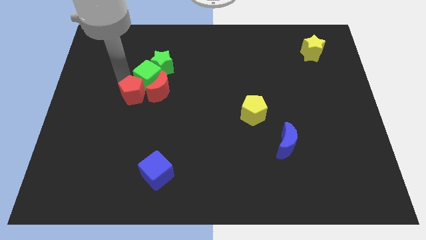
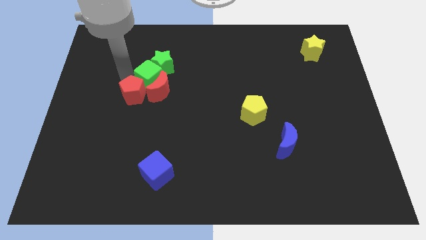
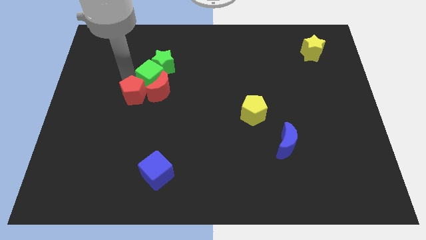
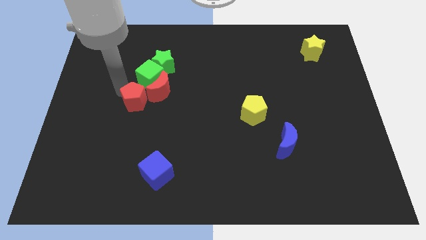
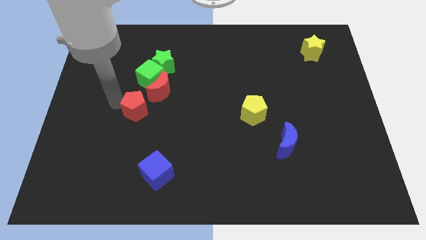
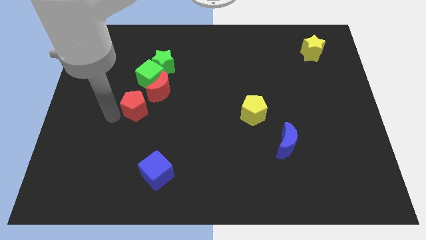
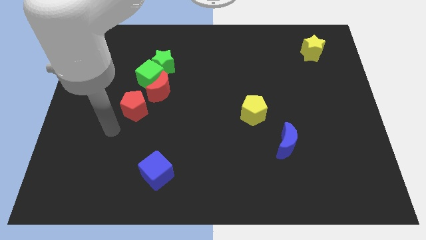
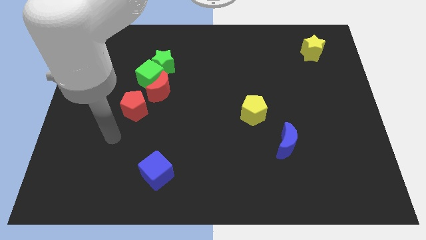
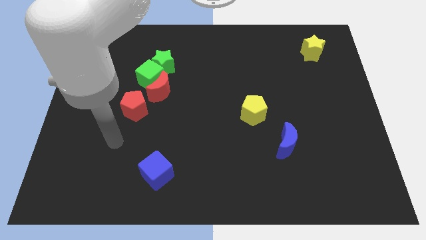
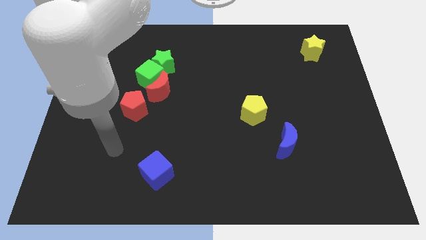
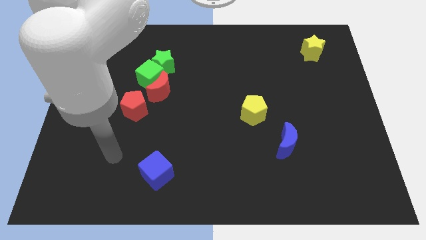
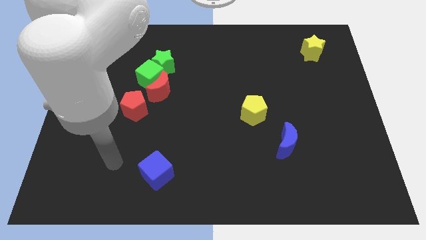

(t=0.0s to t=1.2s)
slightly push red pentagon downwards

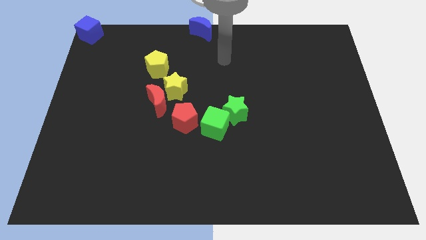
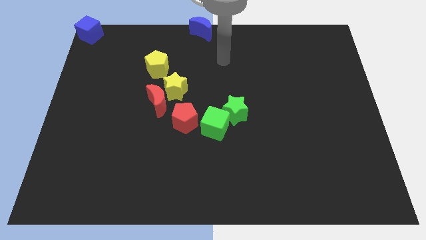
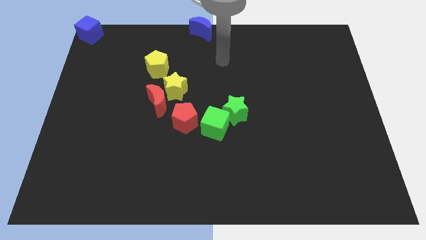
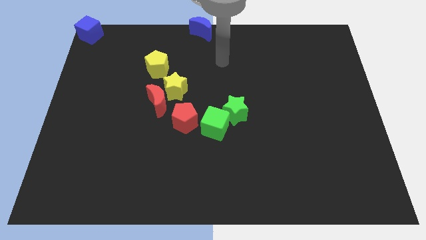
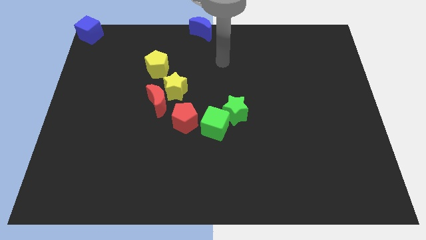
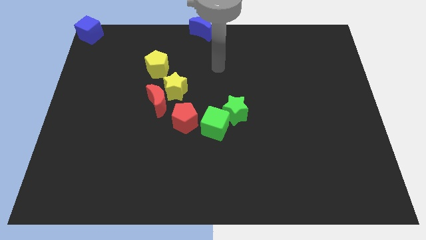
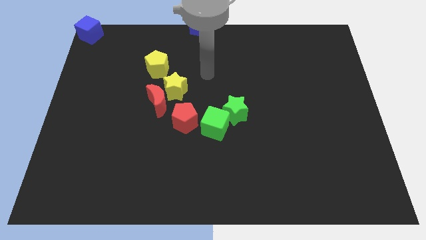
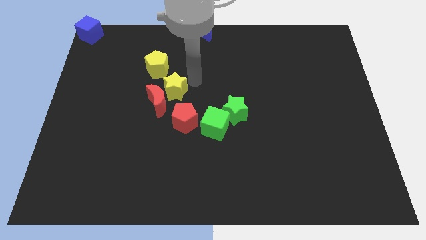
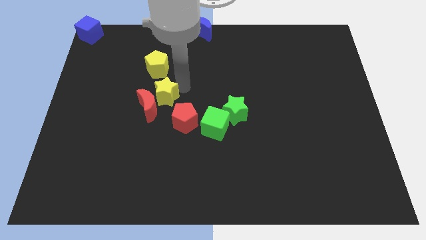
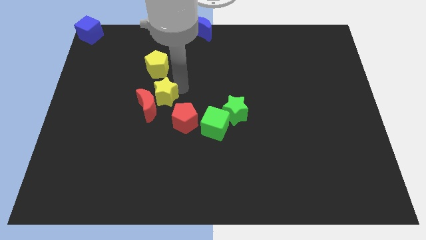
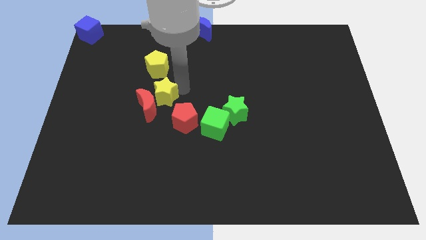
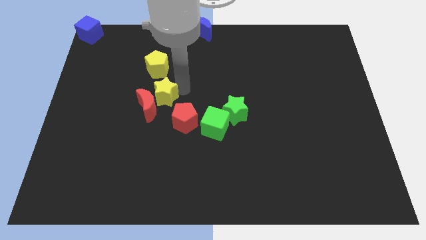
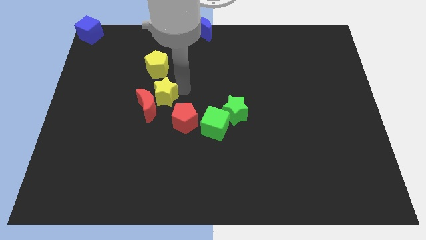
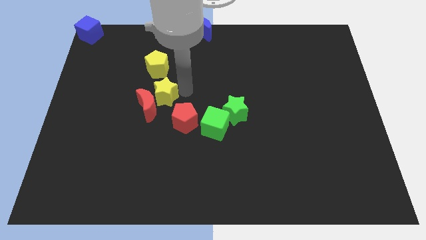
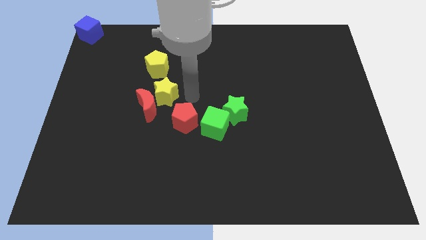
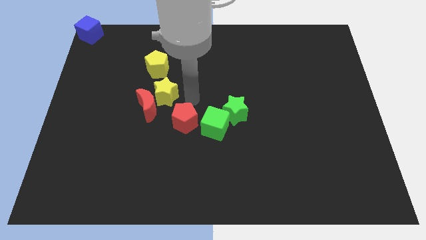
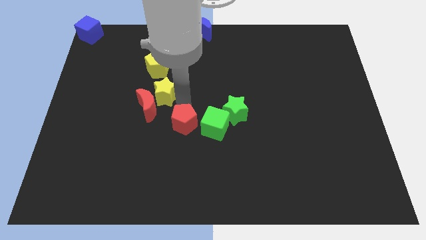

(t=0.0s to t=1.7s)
move the red moon with the yellow star

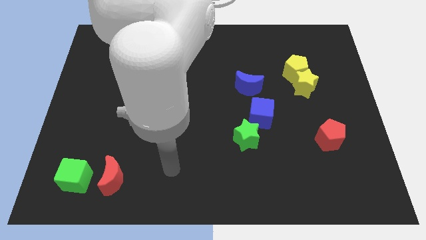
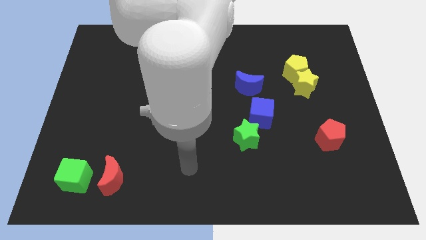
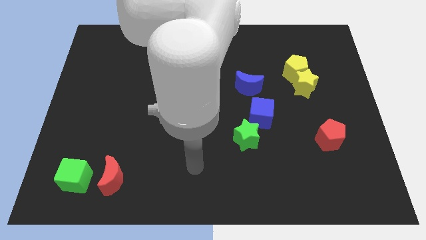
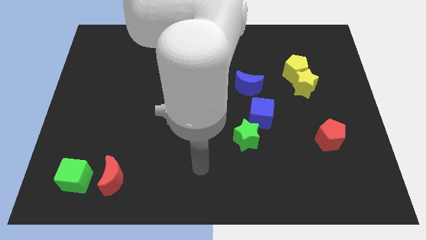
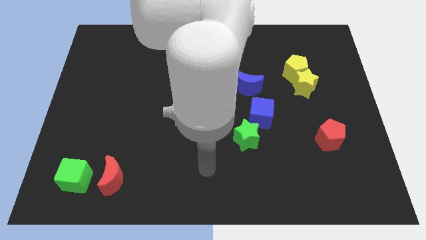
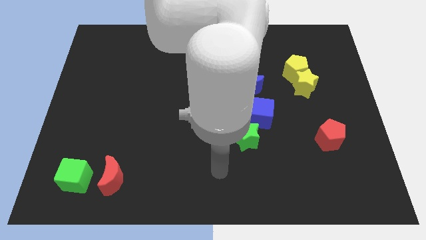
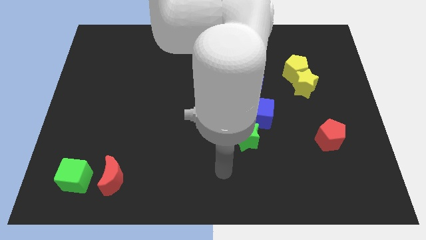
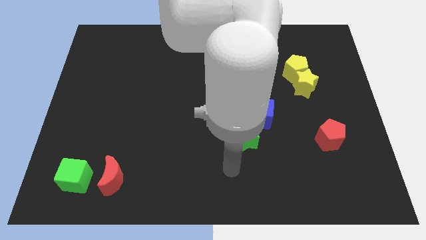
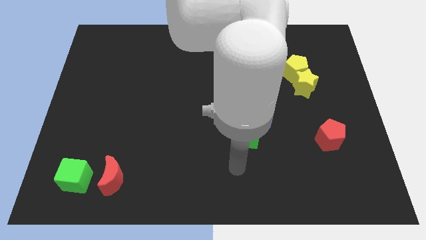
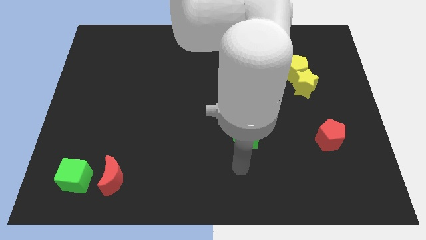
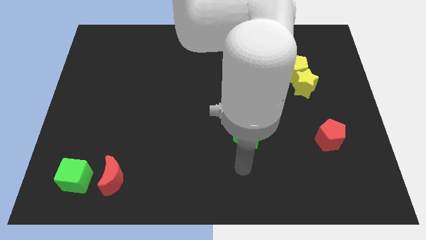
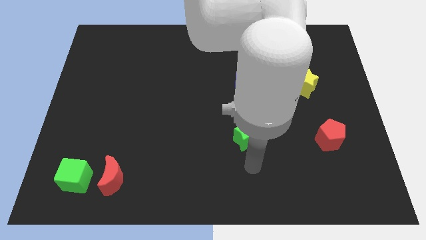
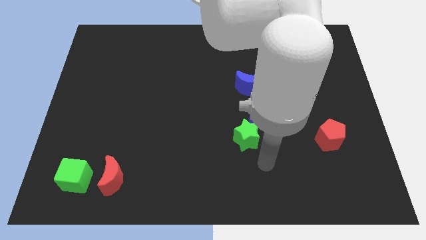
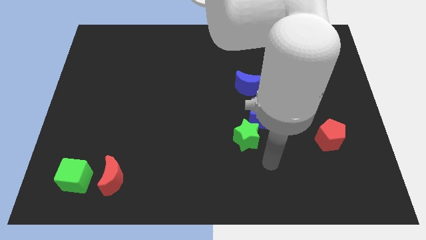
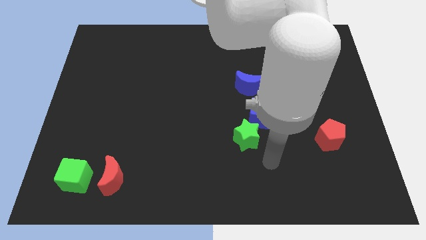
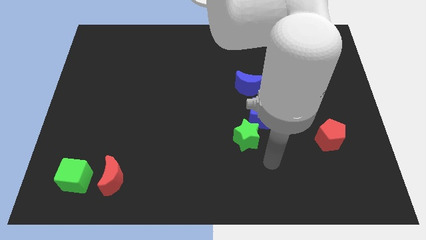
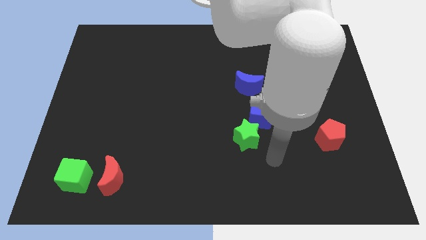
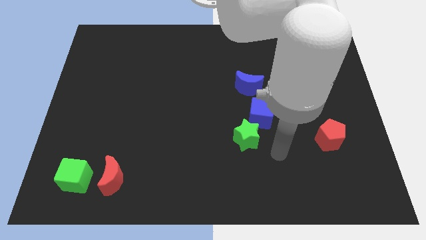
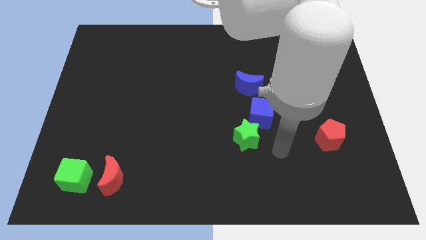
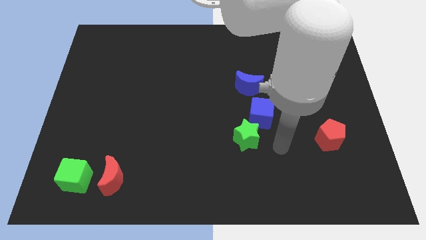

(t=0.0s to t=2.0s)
move your arm to the bottom right of the green star

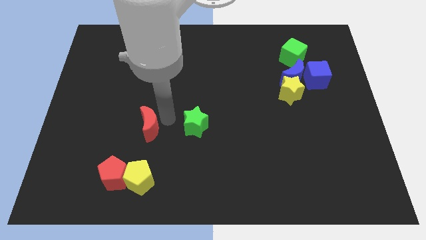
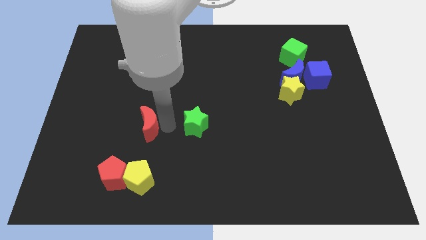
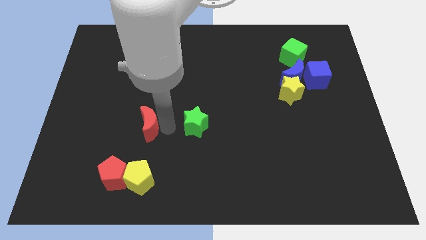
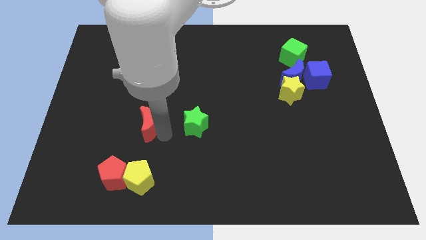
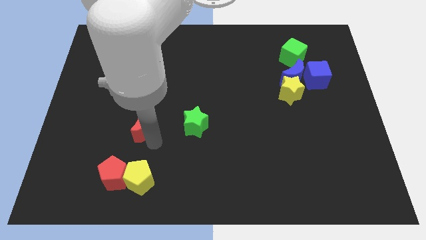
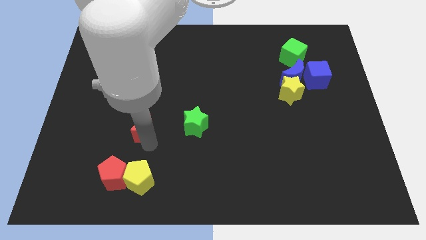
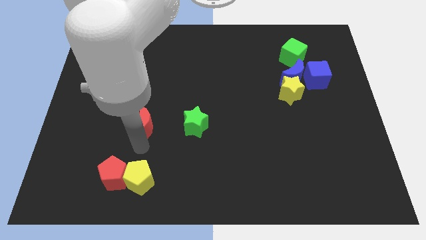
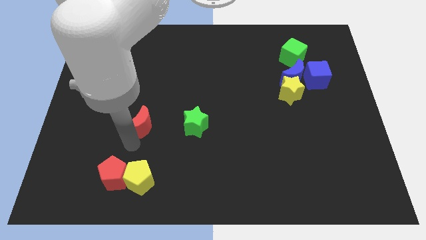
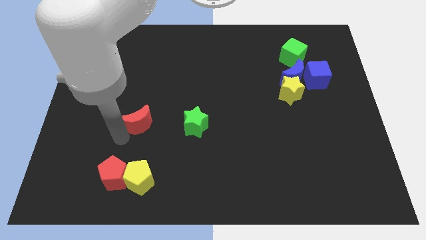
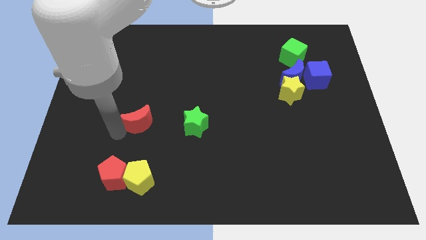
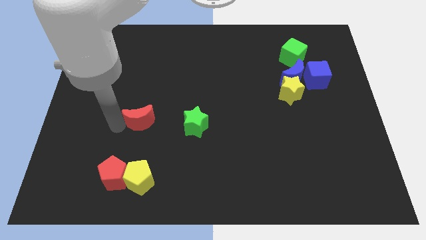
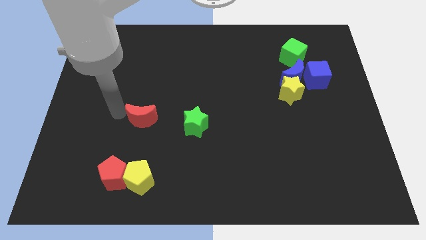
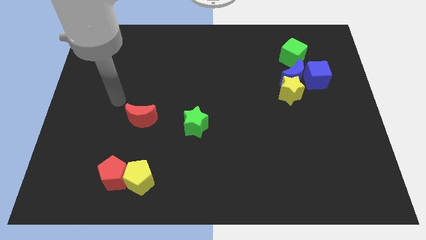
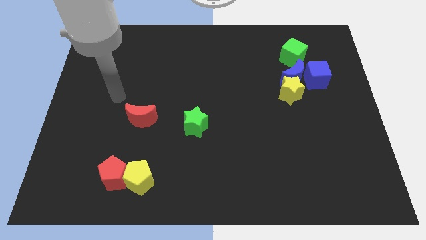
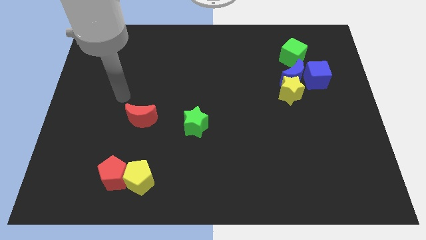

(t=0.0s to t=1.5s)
place the red moon horizontal from vertical

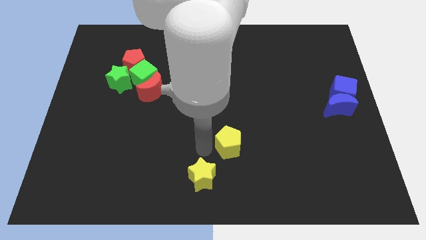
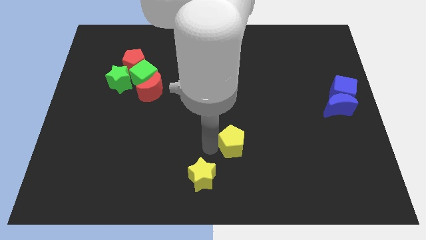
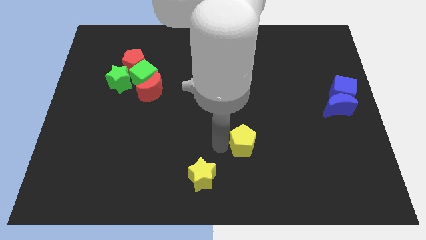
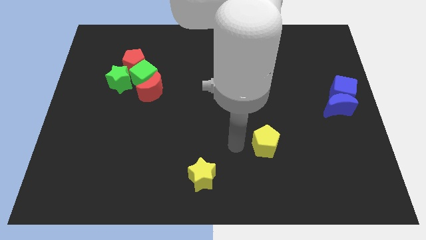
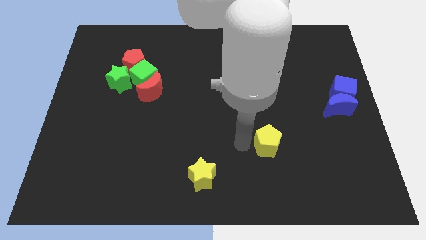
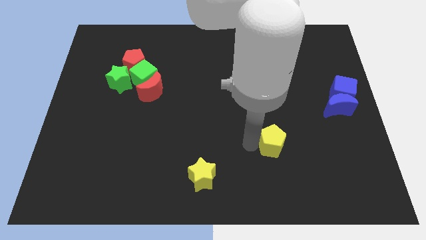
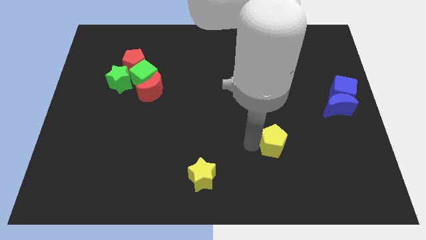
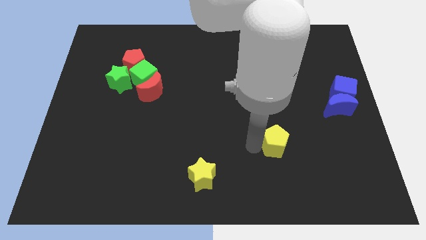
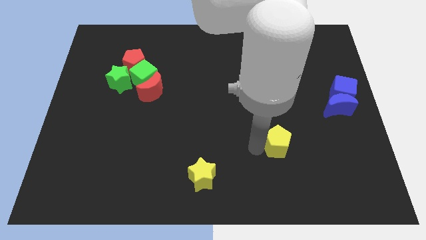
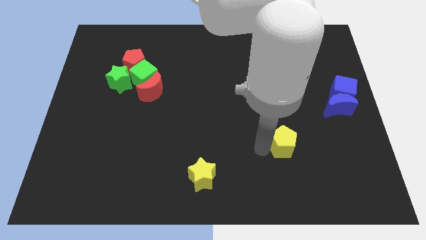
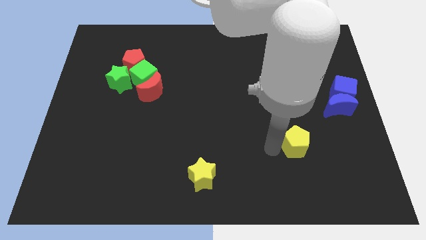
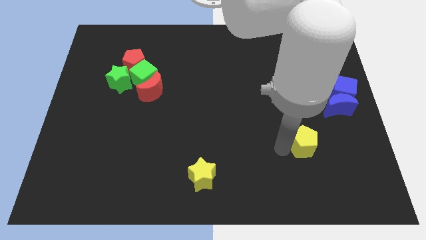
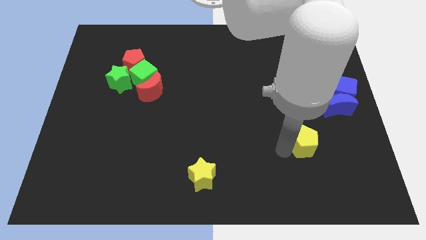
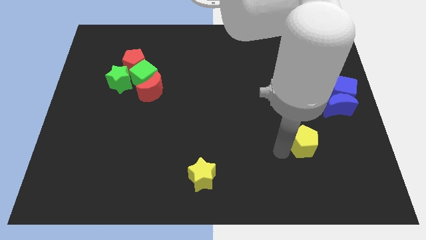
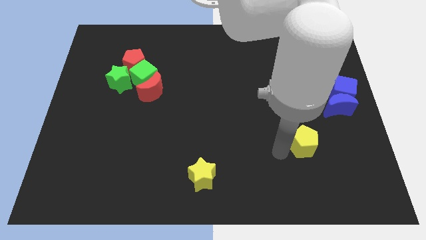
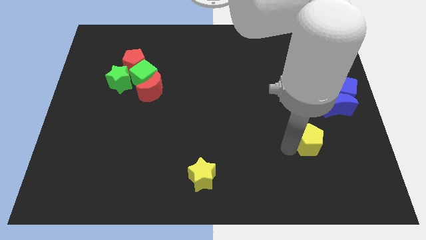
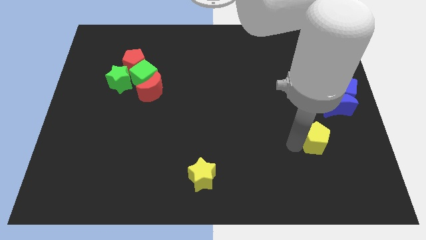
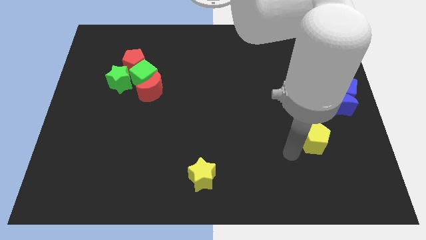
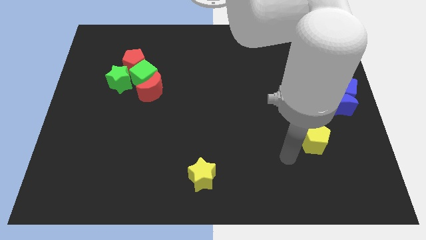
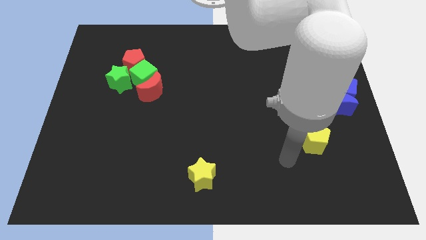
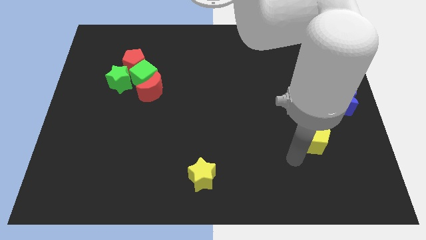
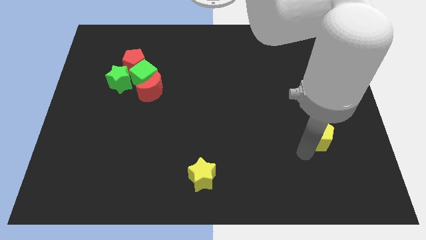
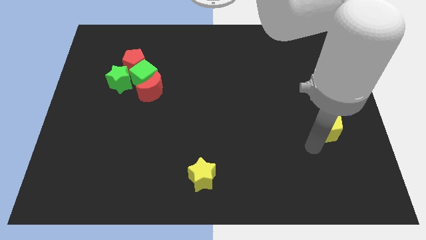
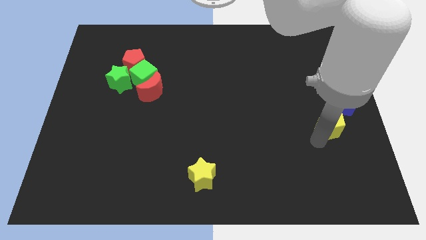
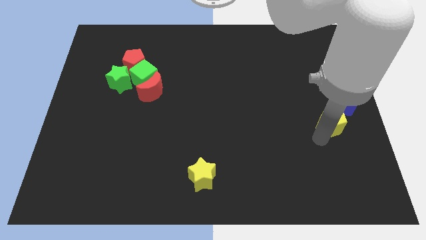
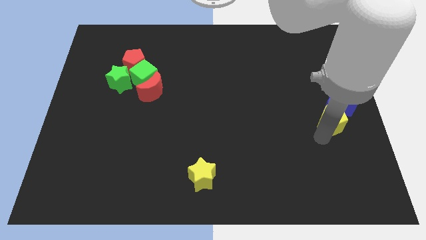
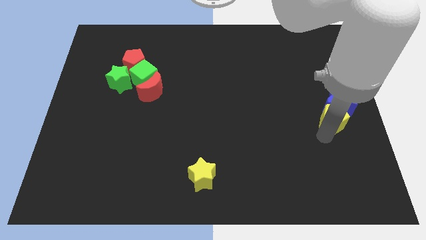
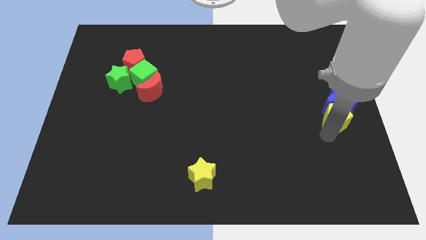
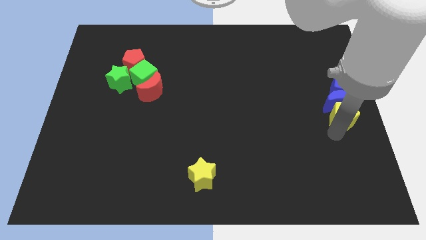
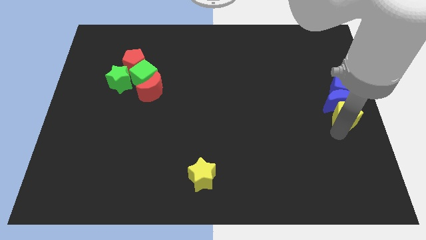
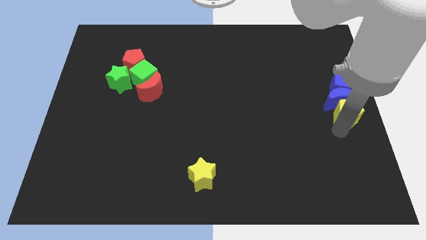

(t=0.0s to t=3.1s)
place yellow pentagon below blue crescent
